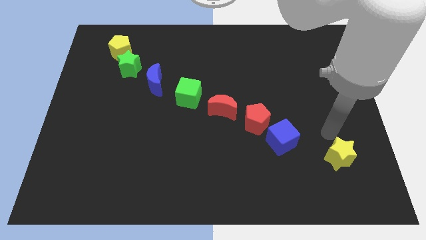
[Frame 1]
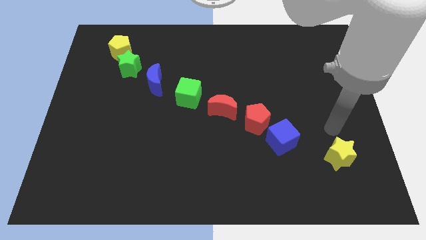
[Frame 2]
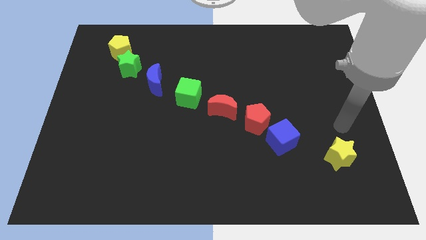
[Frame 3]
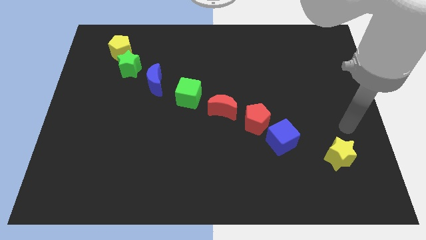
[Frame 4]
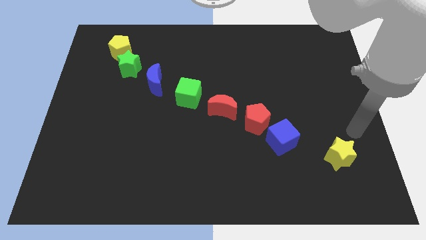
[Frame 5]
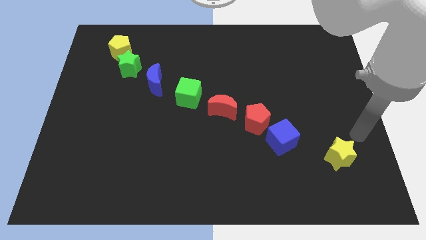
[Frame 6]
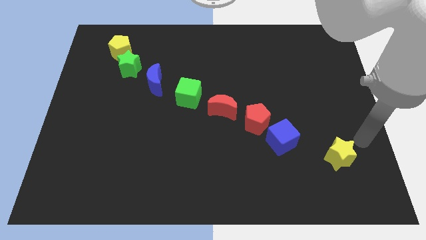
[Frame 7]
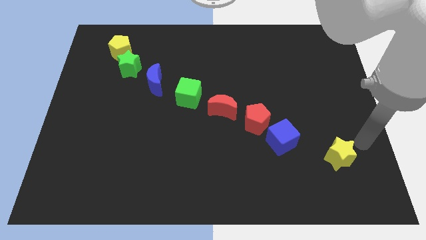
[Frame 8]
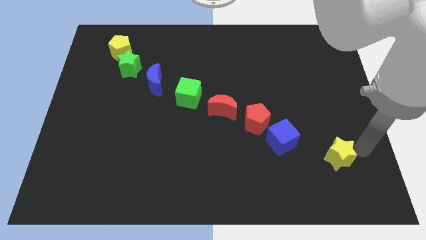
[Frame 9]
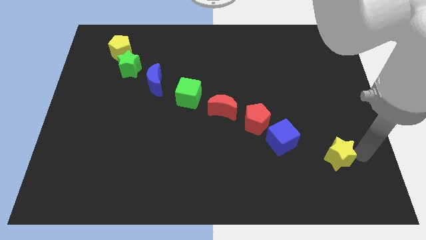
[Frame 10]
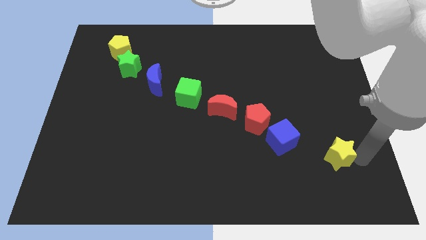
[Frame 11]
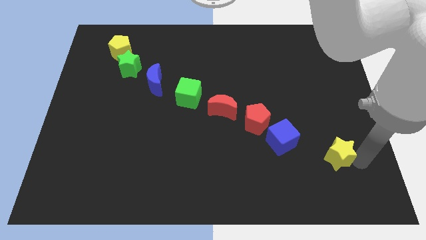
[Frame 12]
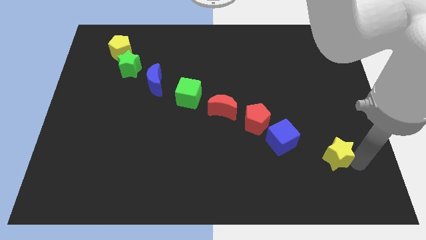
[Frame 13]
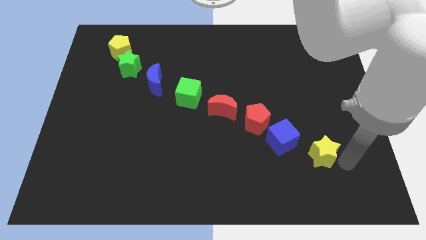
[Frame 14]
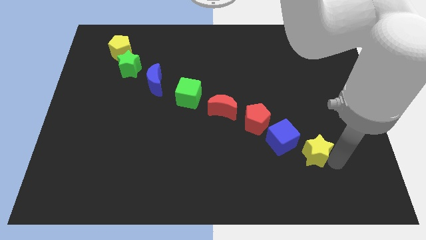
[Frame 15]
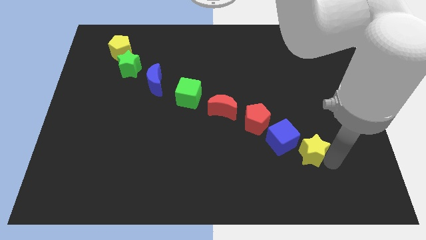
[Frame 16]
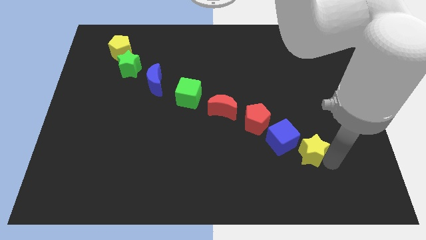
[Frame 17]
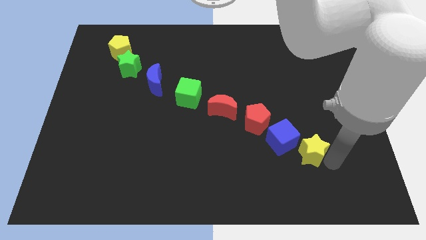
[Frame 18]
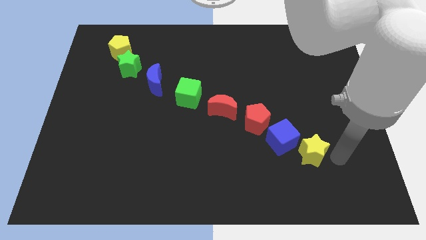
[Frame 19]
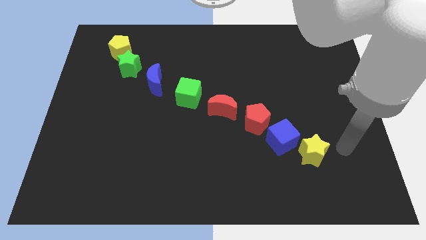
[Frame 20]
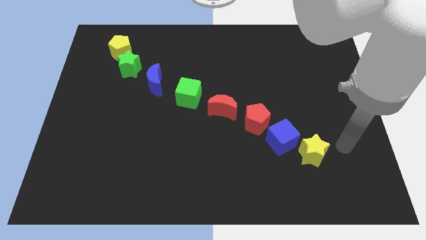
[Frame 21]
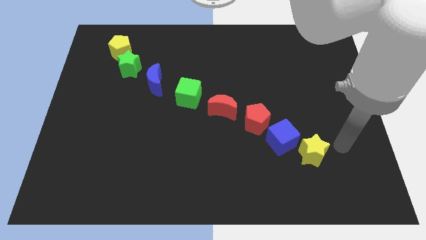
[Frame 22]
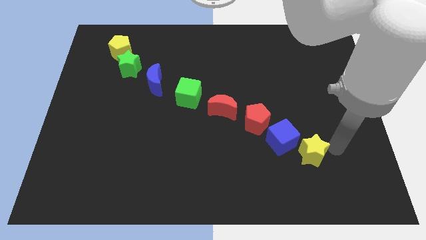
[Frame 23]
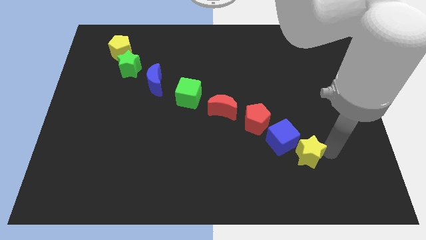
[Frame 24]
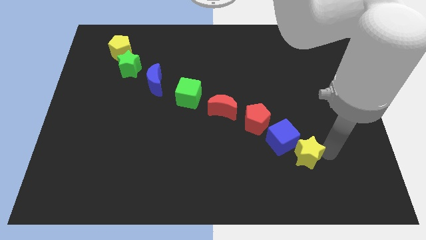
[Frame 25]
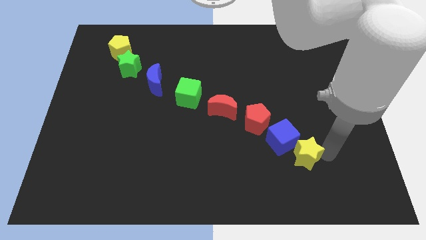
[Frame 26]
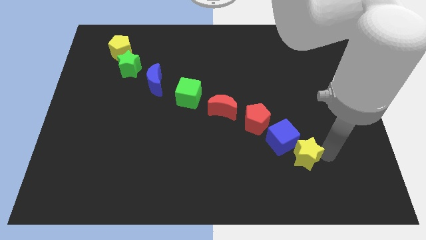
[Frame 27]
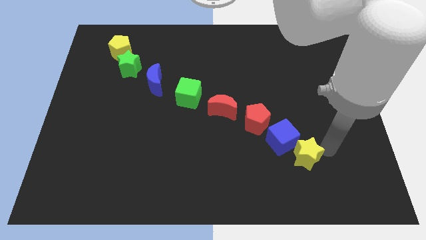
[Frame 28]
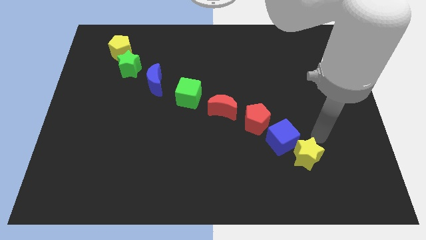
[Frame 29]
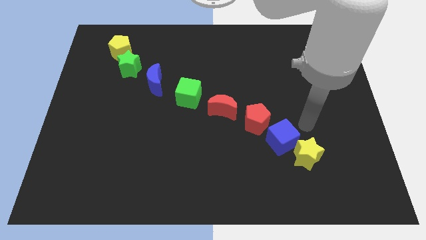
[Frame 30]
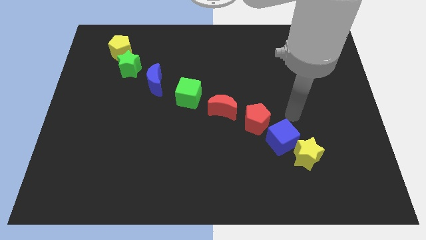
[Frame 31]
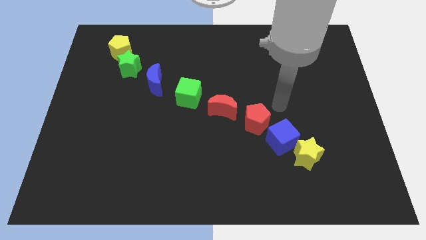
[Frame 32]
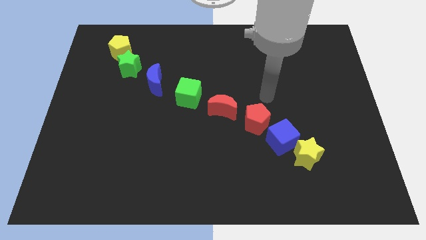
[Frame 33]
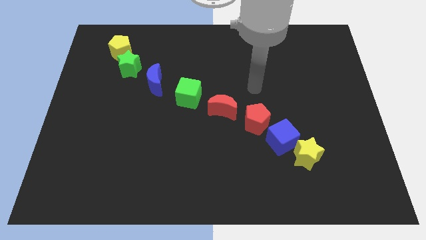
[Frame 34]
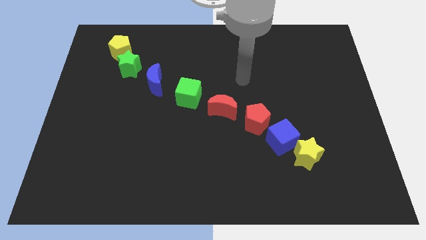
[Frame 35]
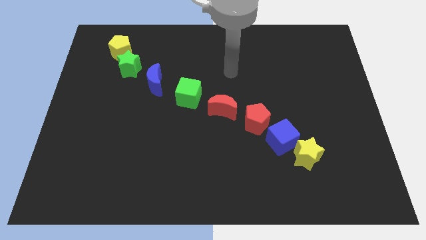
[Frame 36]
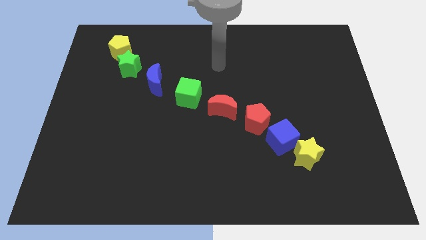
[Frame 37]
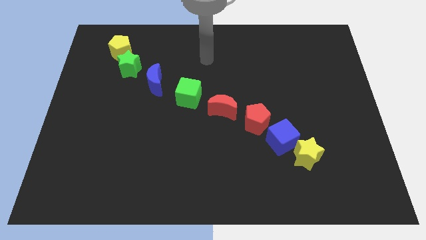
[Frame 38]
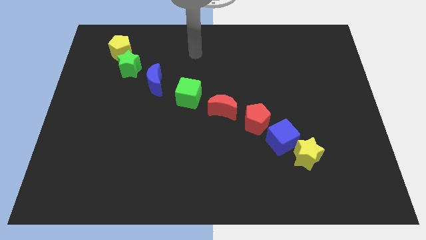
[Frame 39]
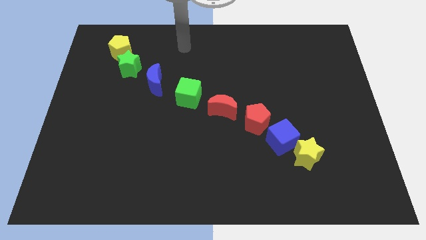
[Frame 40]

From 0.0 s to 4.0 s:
push the yellow star towards the blue cube to form a line

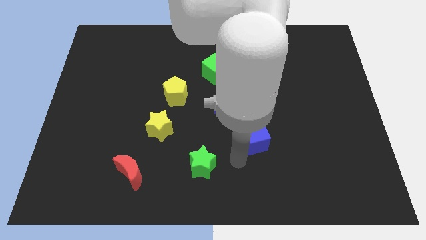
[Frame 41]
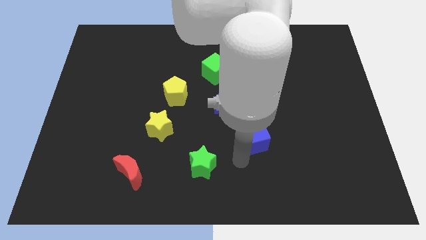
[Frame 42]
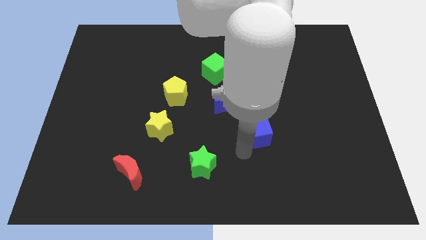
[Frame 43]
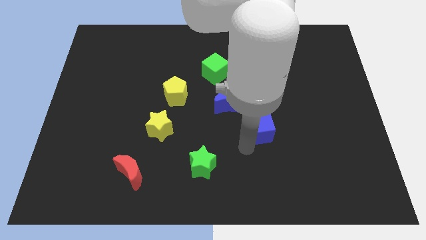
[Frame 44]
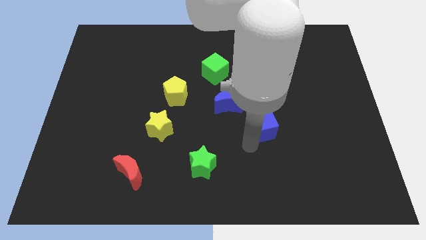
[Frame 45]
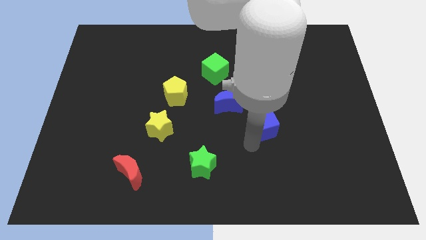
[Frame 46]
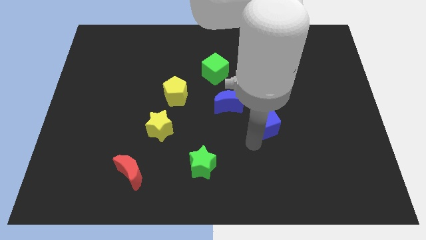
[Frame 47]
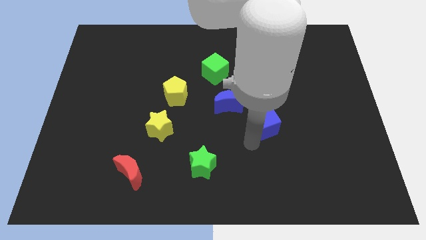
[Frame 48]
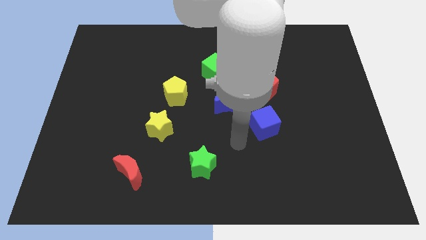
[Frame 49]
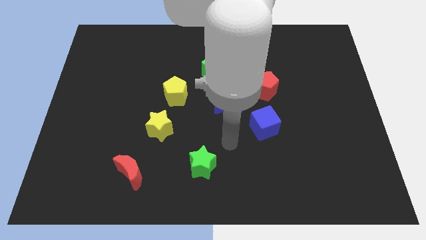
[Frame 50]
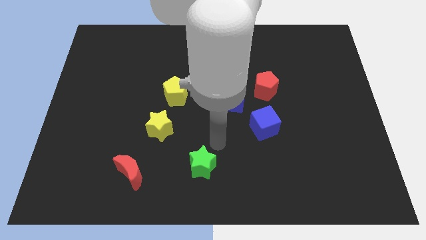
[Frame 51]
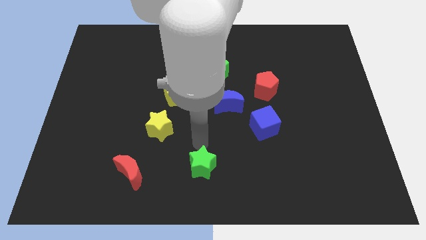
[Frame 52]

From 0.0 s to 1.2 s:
put the blue cube at the bottom of red pentagon

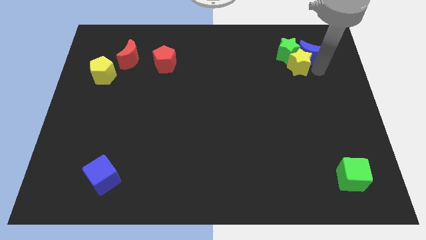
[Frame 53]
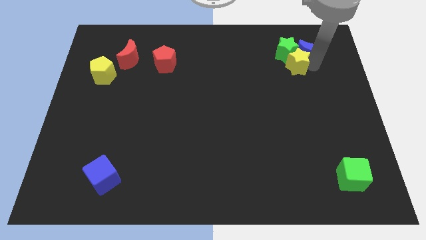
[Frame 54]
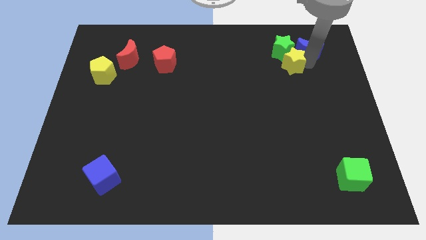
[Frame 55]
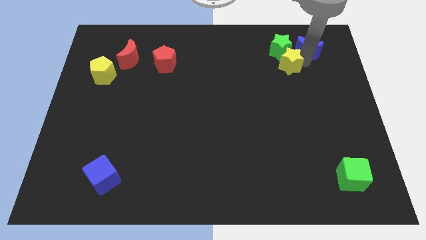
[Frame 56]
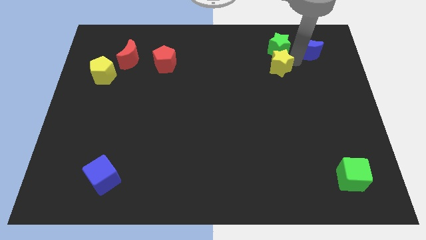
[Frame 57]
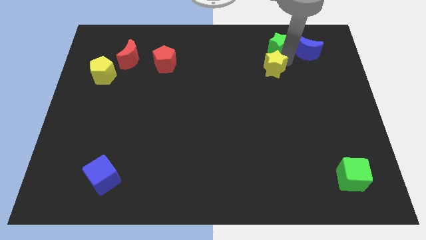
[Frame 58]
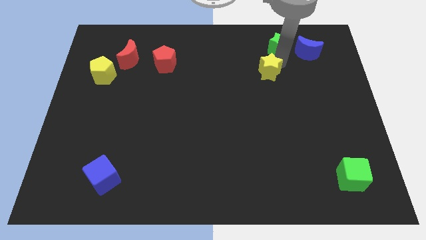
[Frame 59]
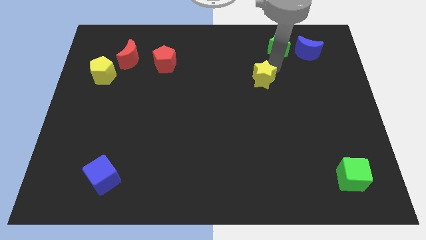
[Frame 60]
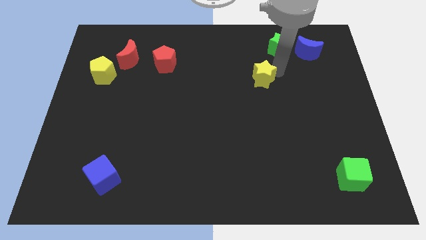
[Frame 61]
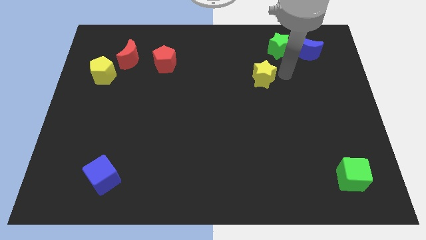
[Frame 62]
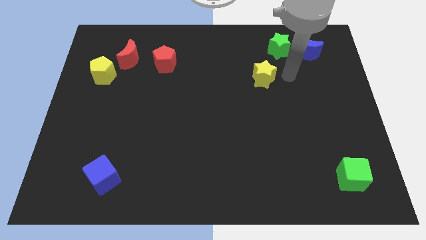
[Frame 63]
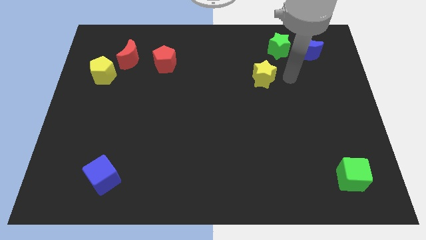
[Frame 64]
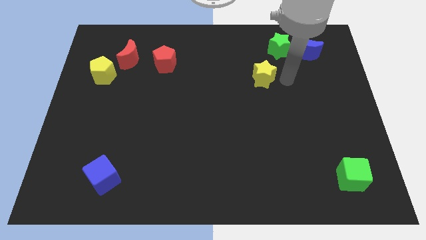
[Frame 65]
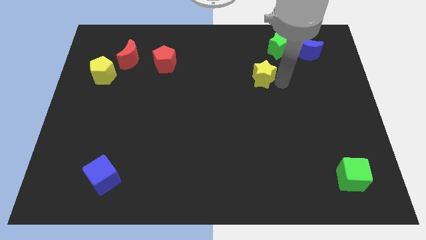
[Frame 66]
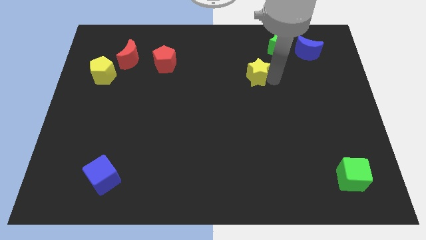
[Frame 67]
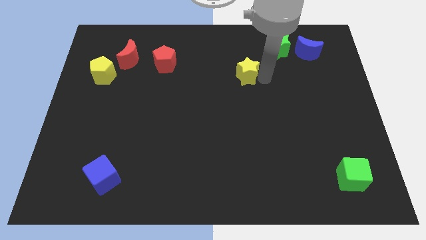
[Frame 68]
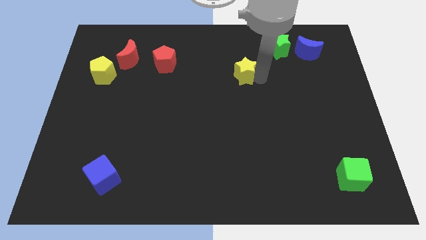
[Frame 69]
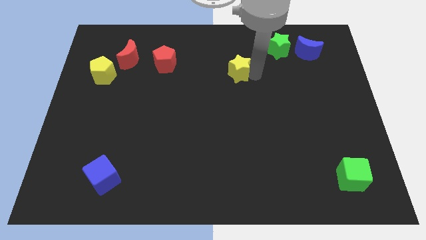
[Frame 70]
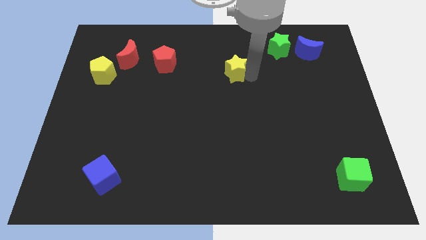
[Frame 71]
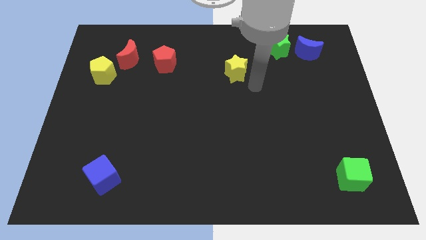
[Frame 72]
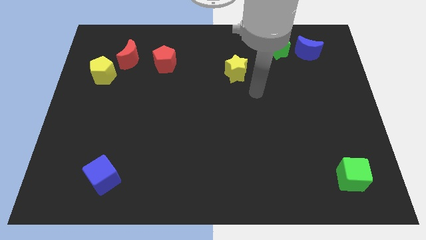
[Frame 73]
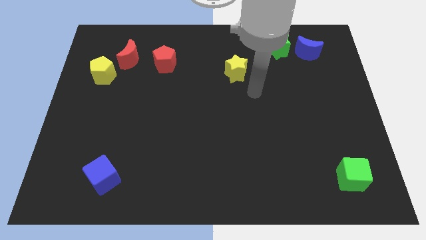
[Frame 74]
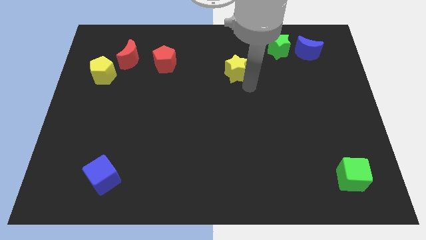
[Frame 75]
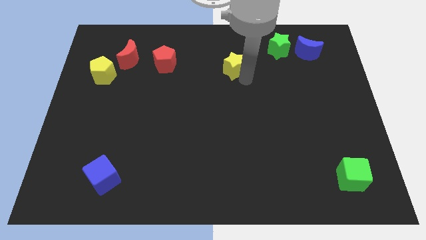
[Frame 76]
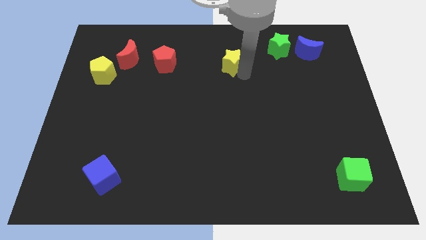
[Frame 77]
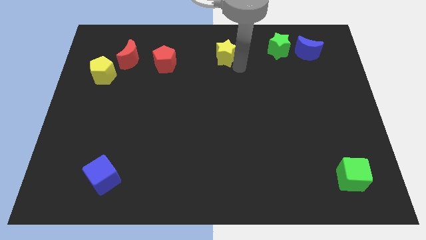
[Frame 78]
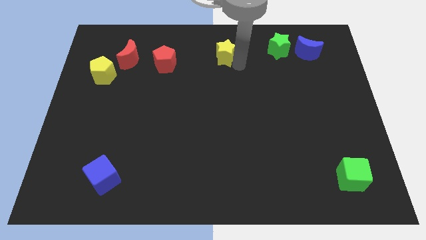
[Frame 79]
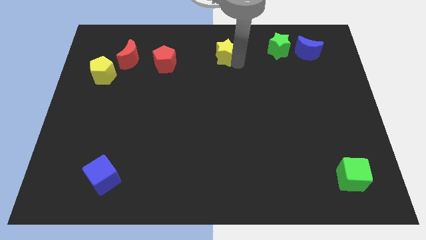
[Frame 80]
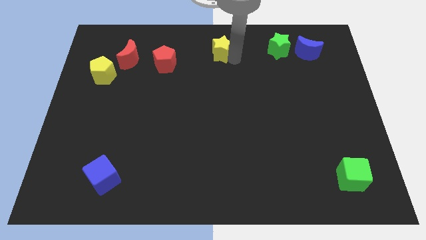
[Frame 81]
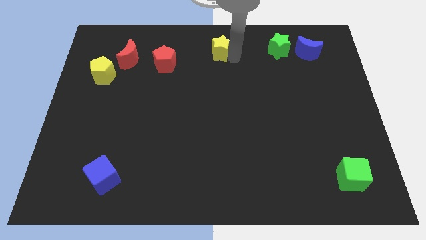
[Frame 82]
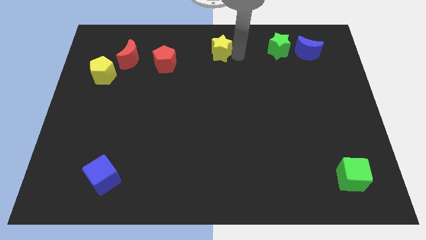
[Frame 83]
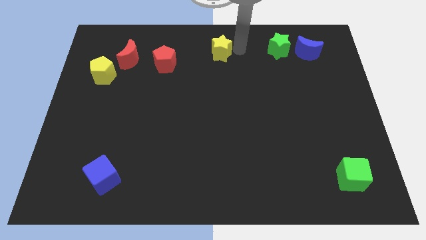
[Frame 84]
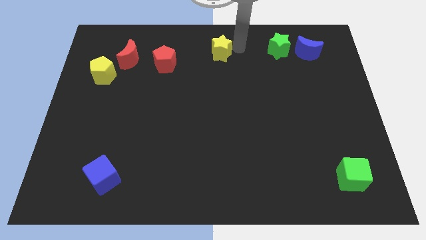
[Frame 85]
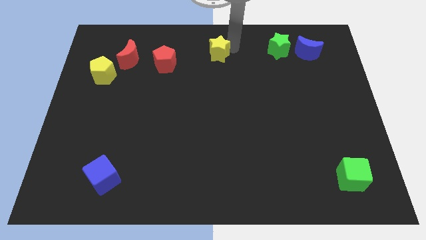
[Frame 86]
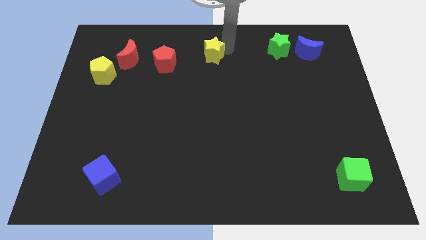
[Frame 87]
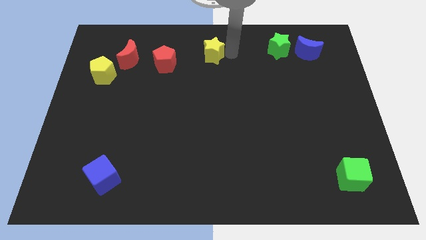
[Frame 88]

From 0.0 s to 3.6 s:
push the yellow star to the top center of the board

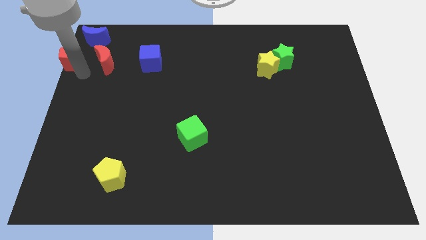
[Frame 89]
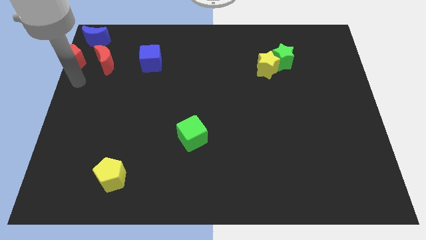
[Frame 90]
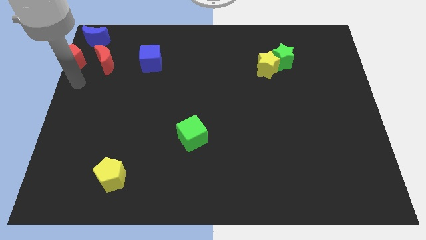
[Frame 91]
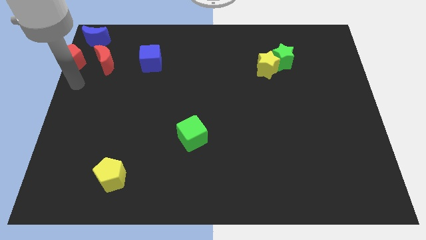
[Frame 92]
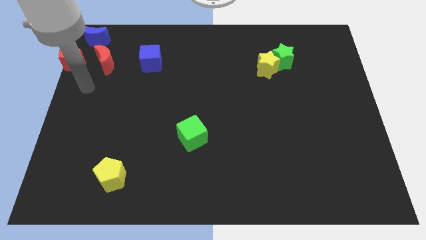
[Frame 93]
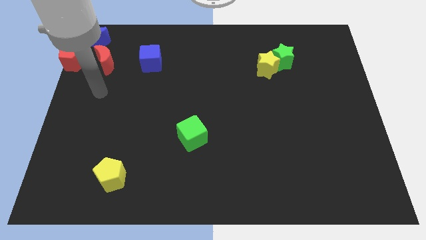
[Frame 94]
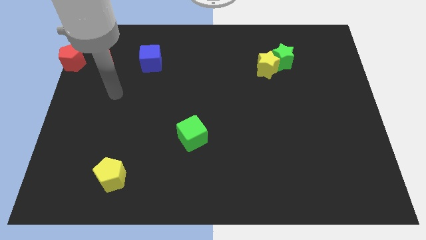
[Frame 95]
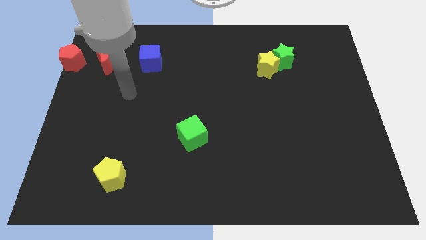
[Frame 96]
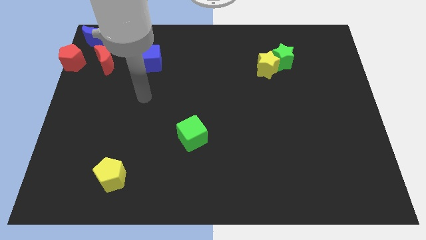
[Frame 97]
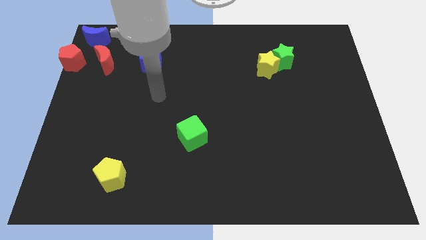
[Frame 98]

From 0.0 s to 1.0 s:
point your hand at the bottom right side of the blue cube
